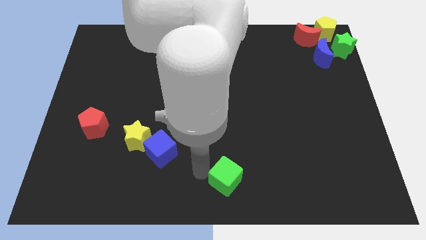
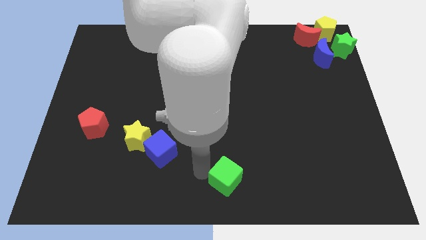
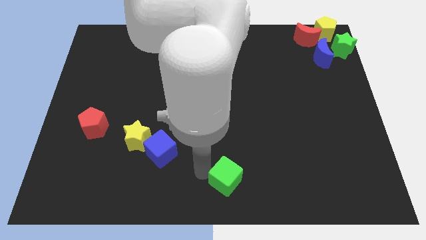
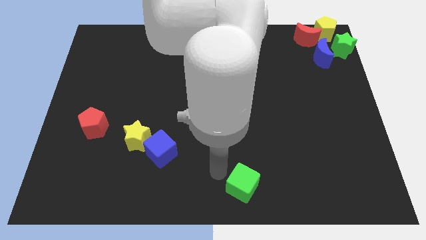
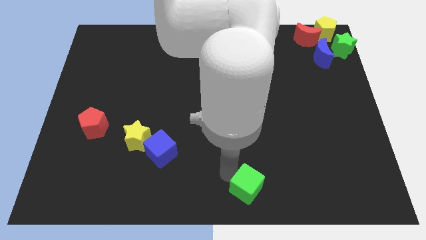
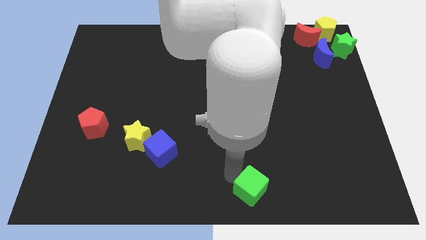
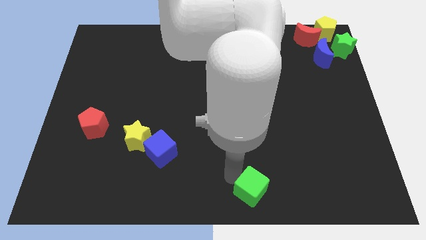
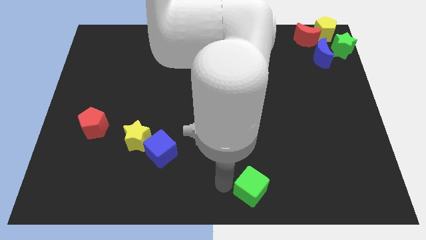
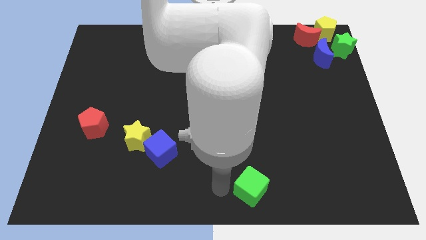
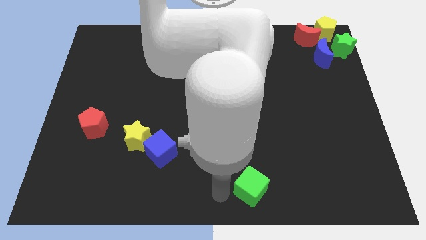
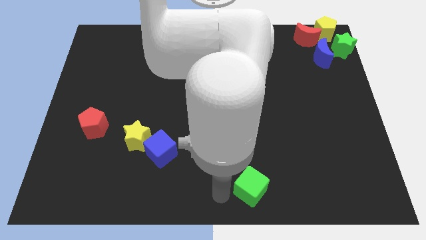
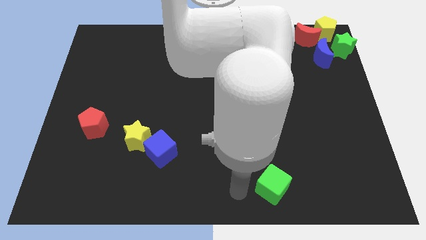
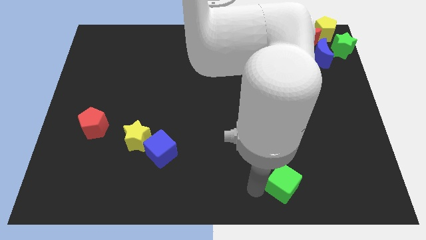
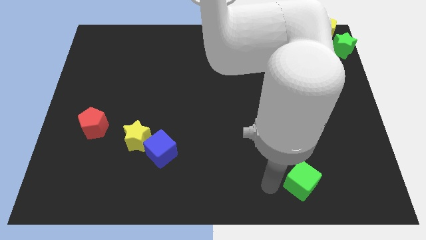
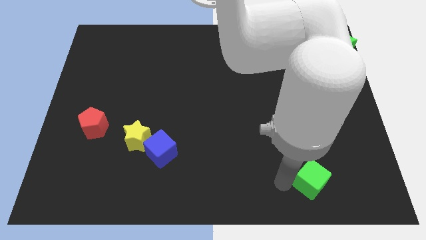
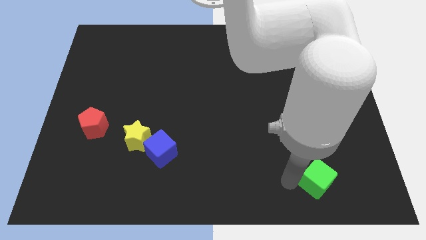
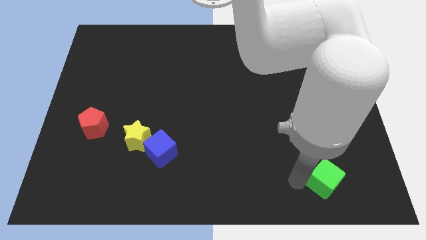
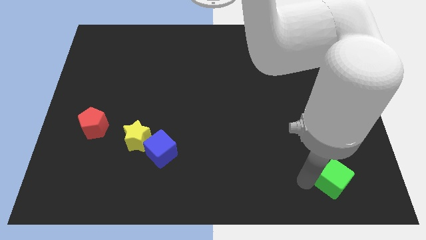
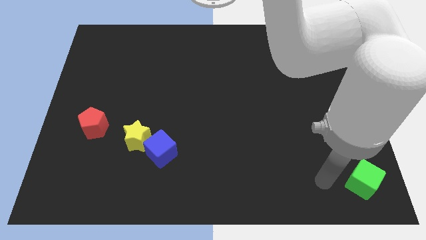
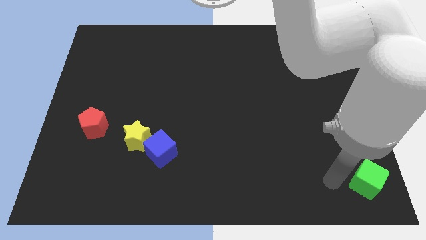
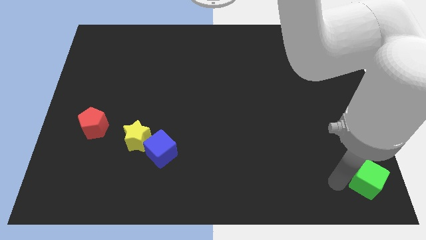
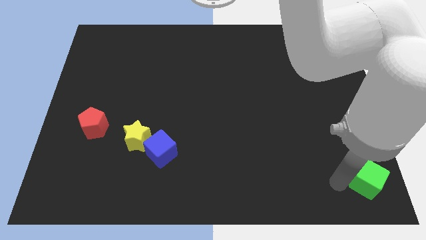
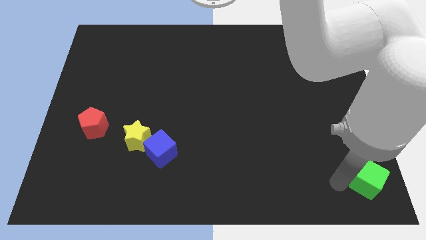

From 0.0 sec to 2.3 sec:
move green cube towards bottom right side of the board

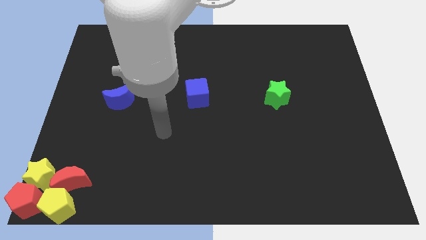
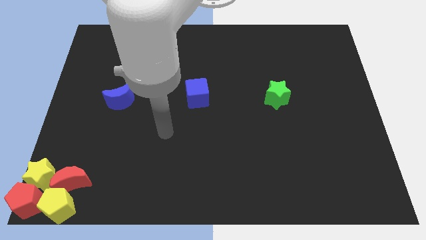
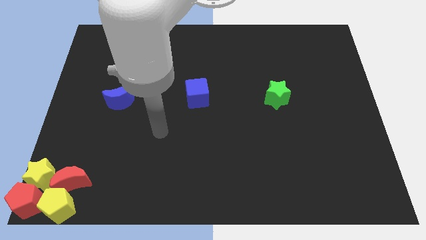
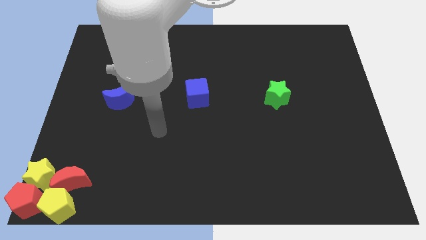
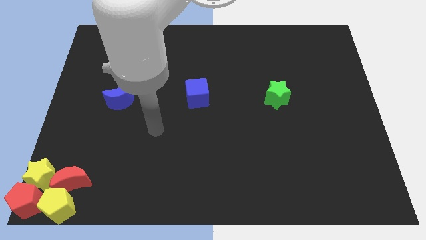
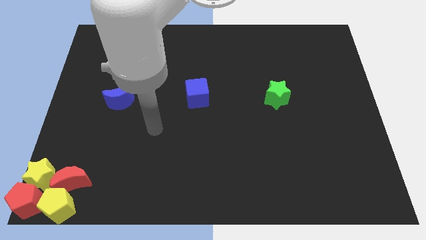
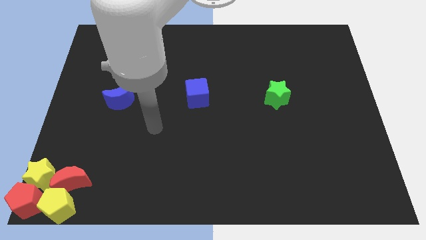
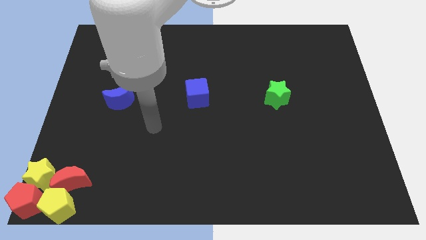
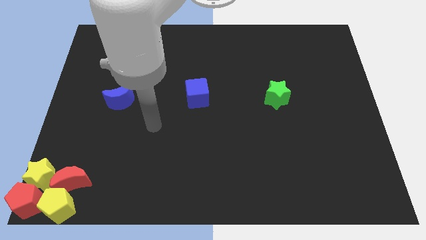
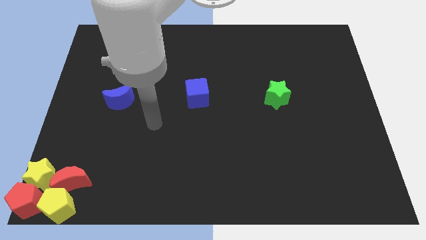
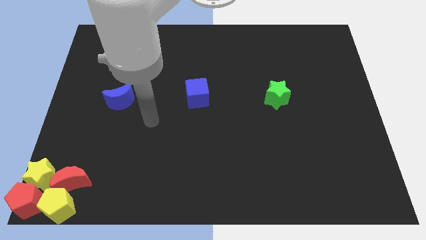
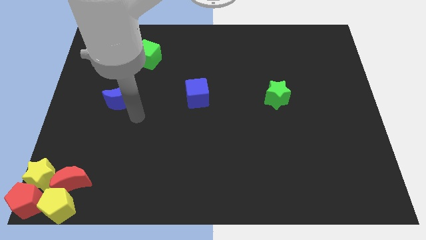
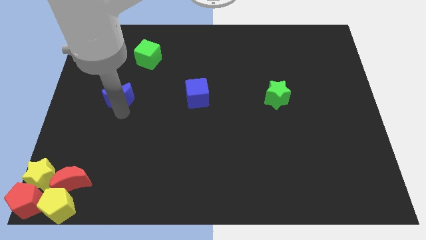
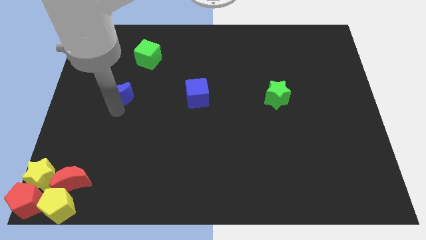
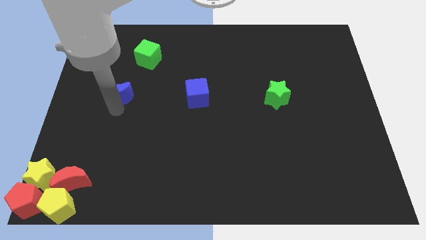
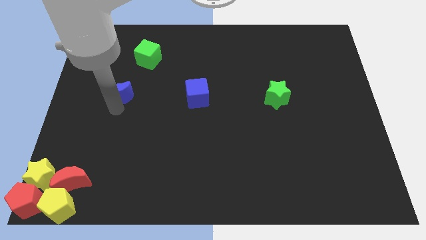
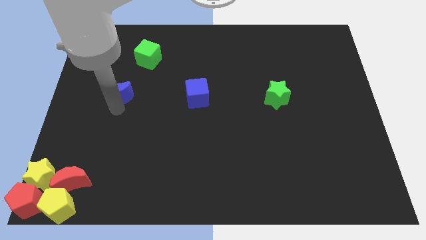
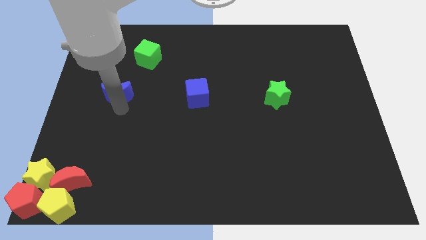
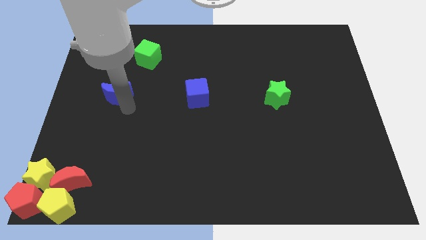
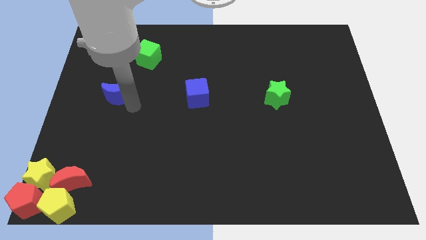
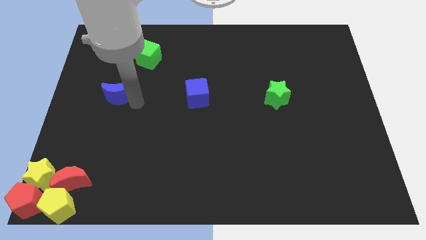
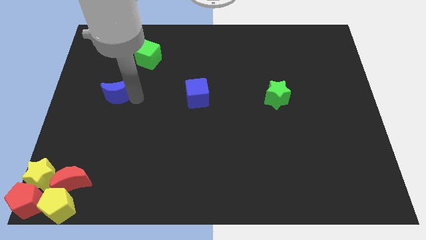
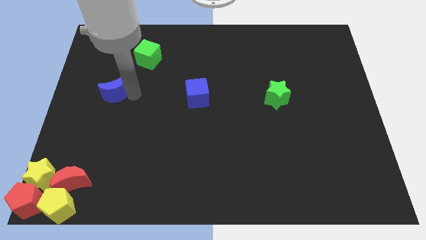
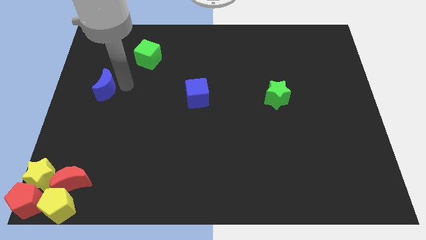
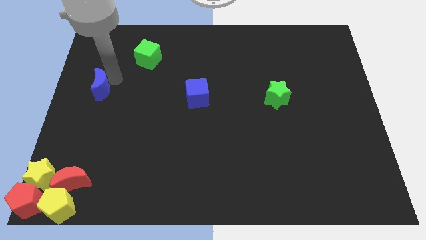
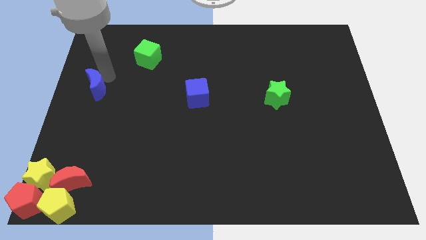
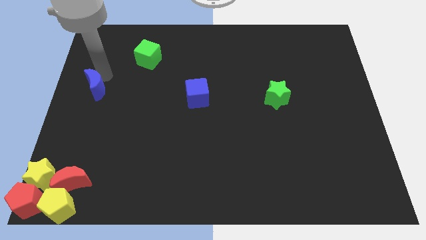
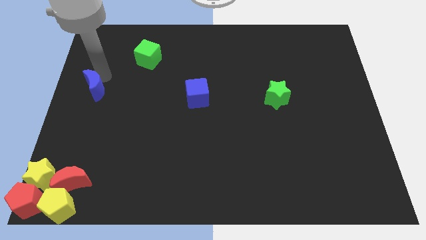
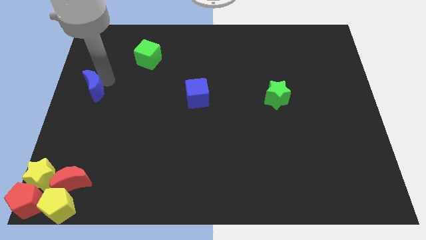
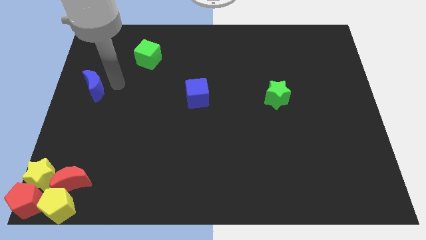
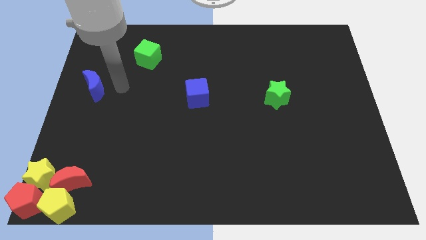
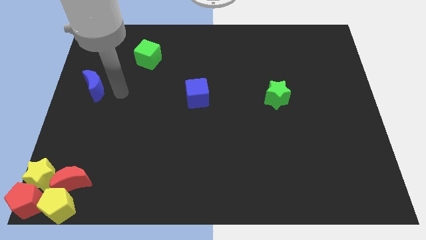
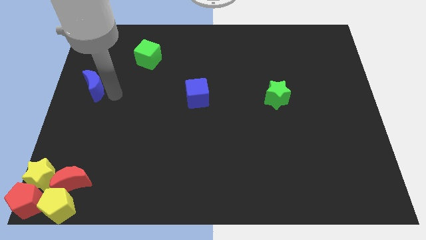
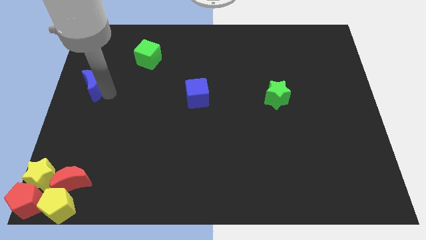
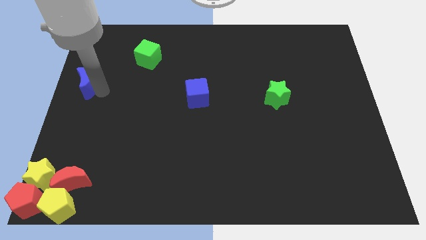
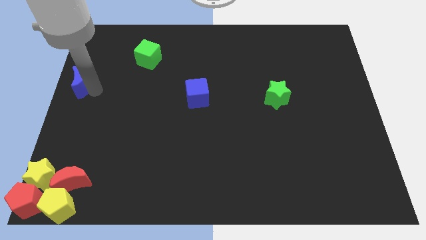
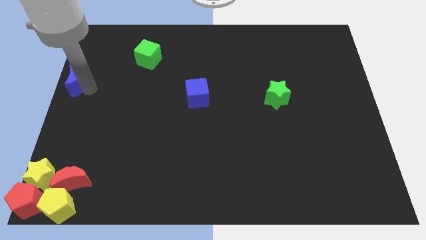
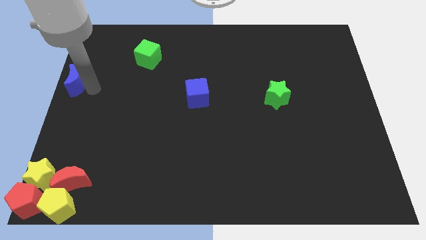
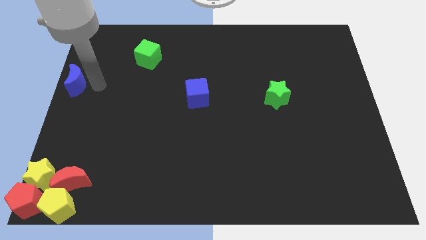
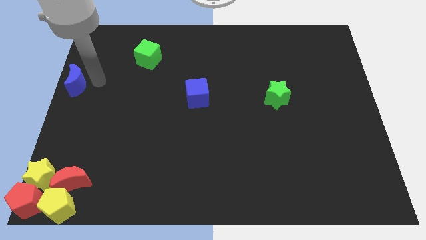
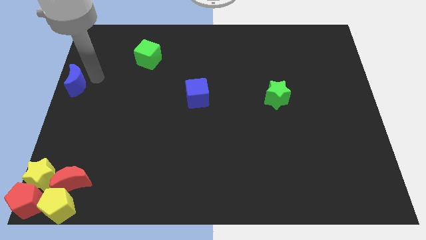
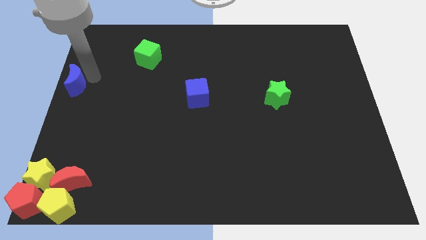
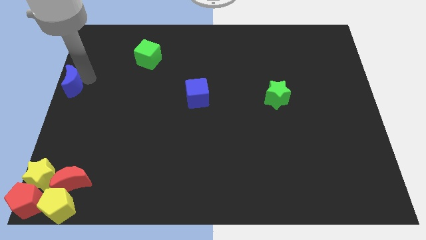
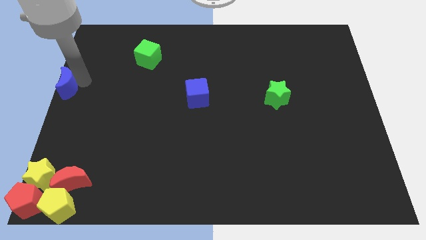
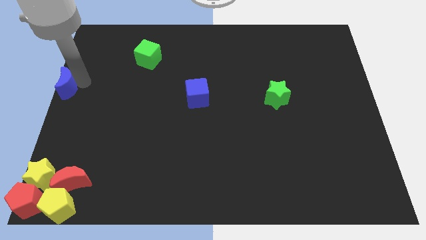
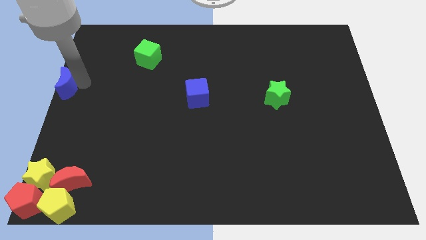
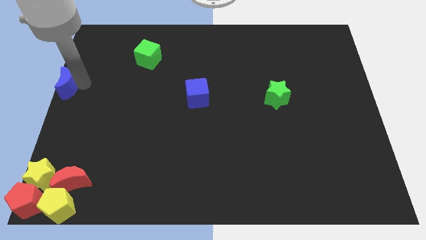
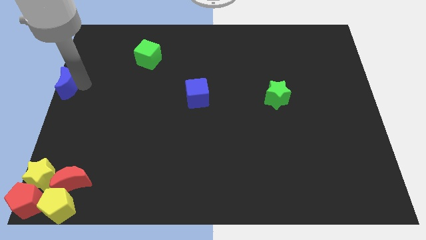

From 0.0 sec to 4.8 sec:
move the blue crescent to the left center of the board

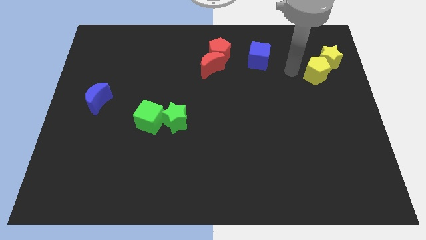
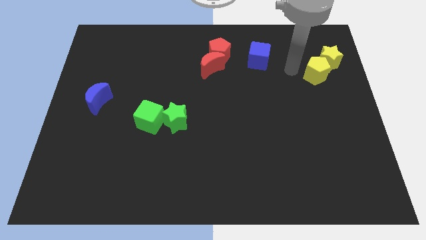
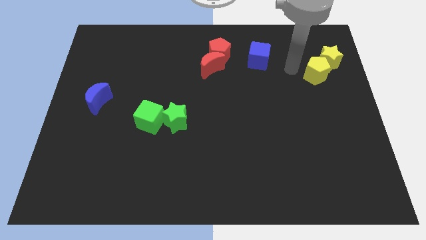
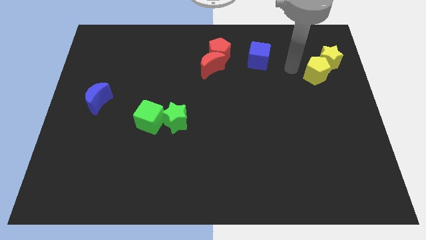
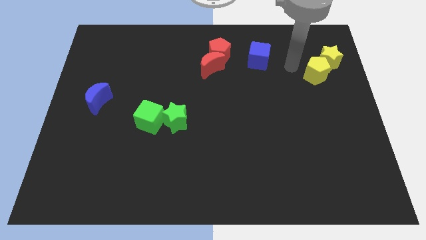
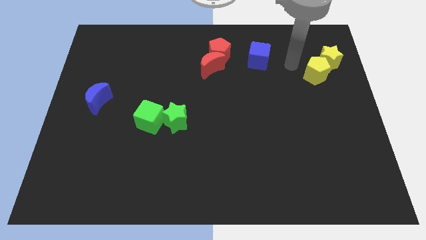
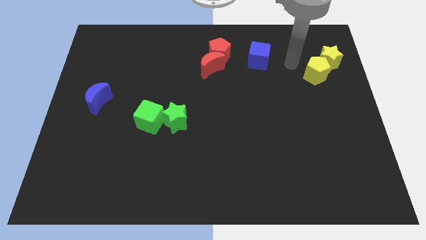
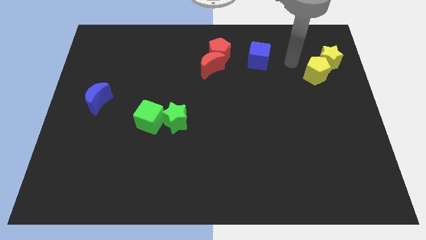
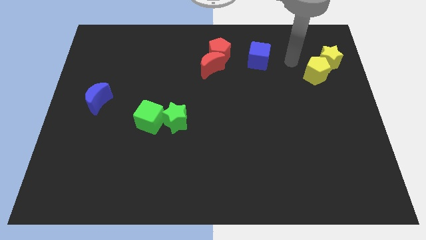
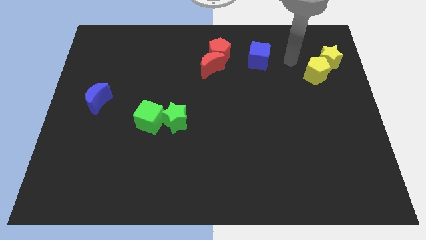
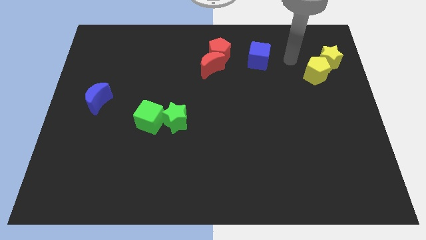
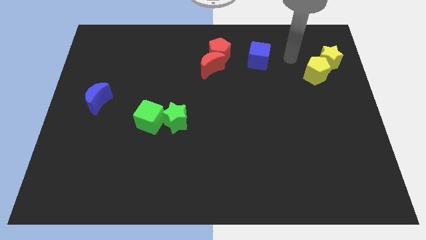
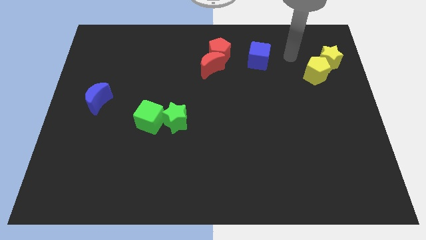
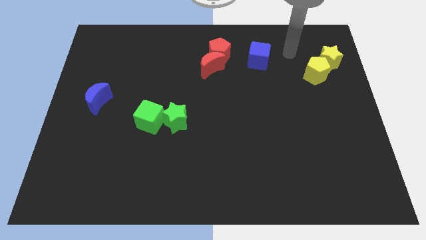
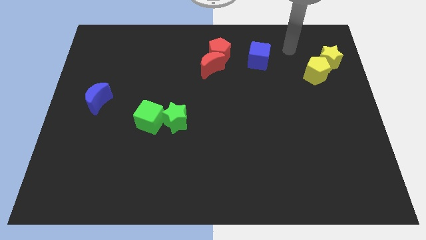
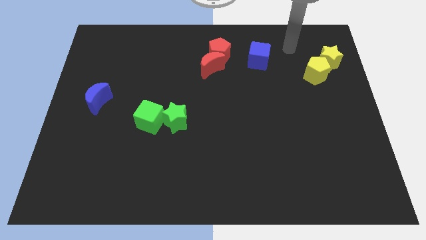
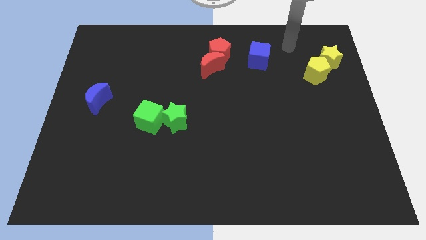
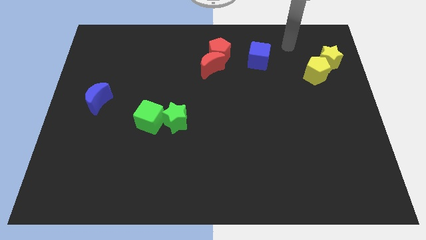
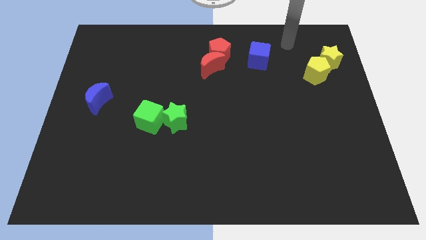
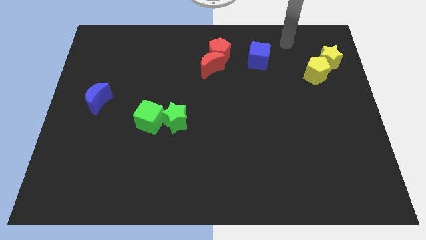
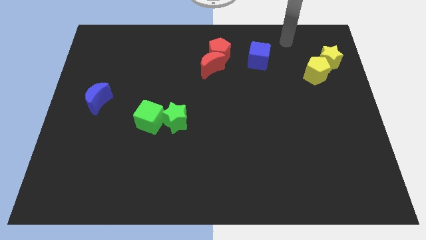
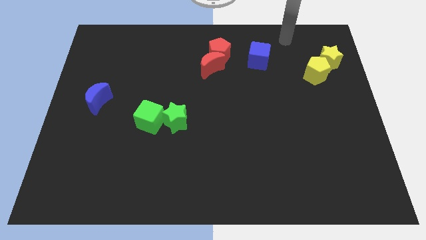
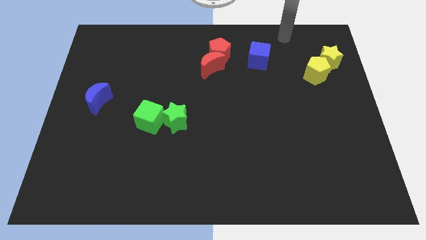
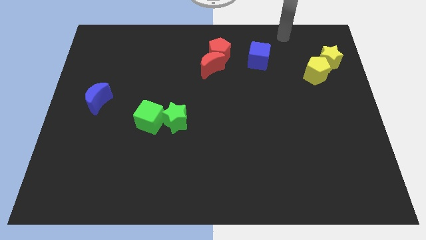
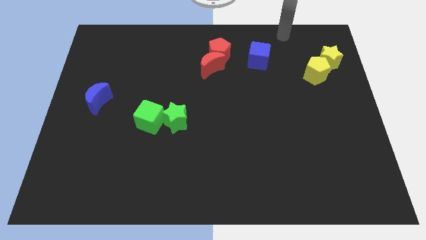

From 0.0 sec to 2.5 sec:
move your arm to the top right side of the board
